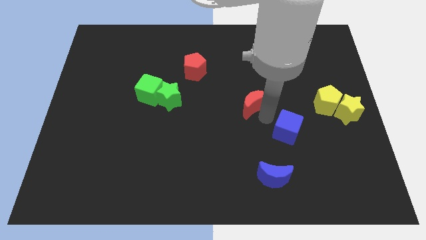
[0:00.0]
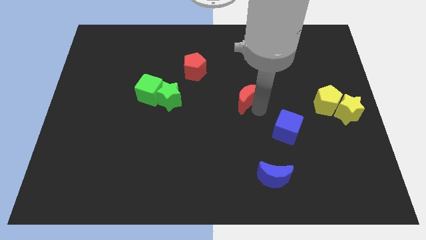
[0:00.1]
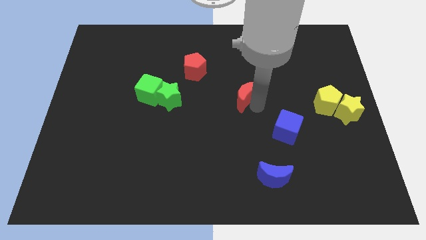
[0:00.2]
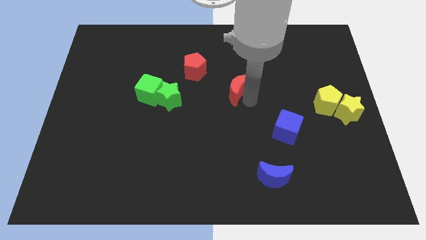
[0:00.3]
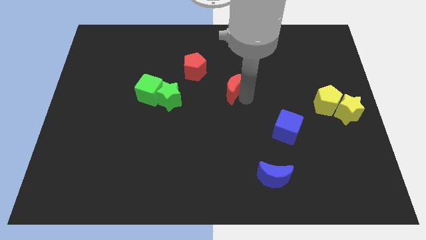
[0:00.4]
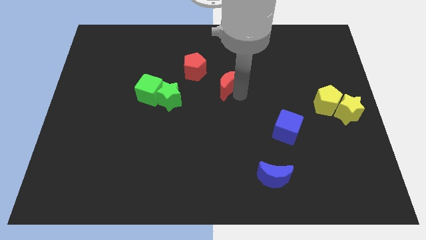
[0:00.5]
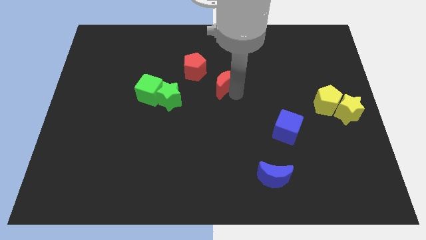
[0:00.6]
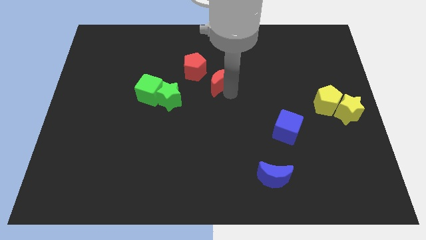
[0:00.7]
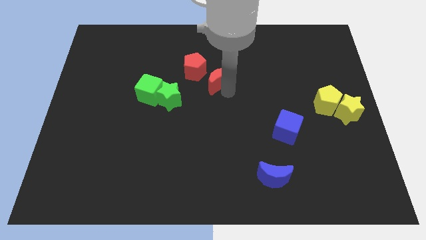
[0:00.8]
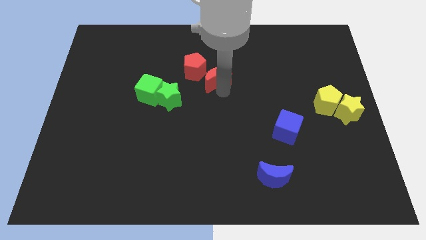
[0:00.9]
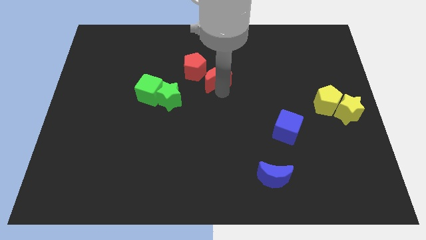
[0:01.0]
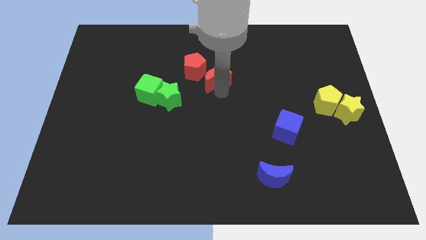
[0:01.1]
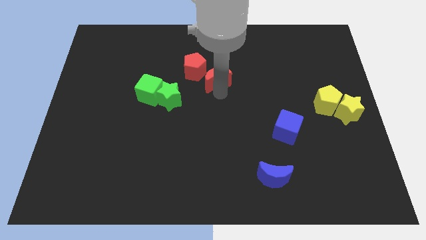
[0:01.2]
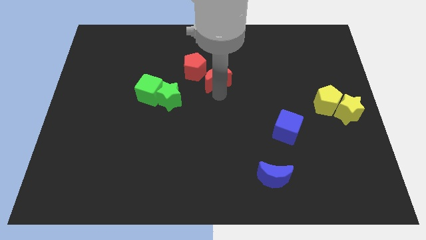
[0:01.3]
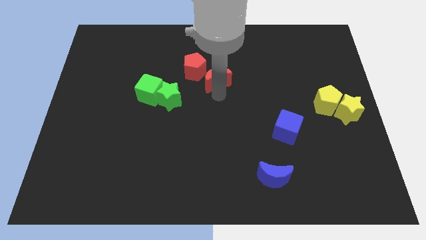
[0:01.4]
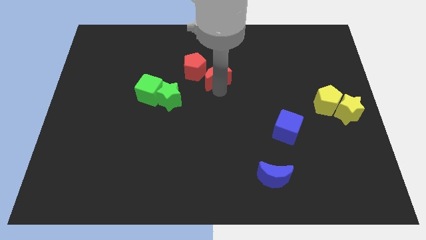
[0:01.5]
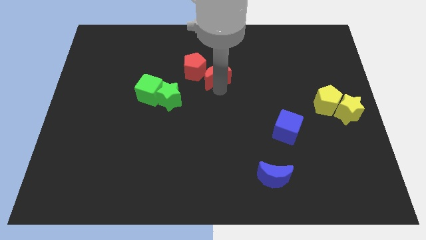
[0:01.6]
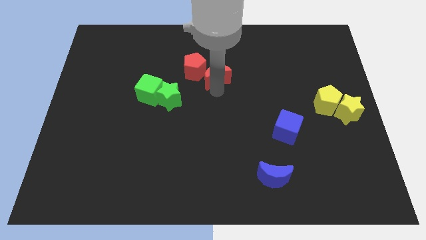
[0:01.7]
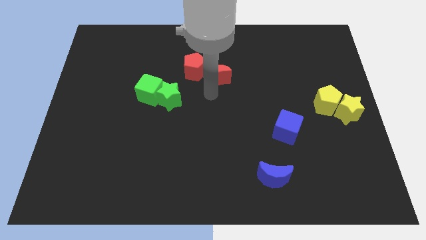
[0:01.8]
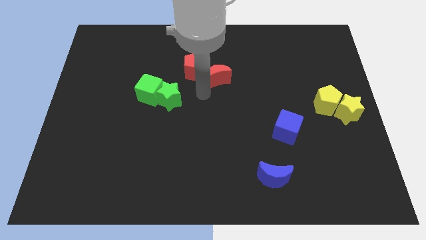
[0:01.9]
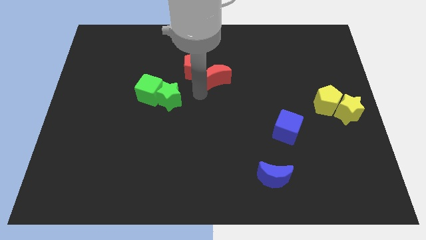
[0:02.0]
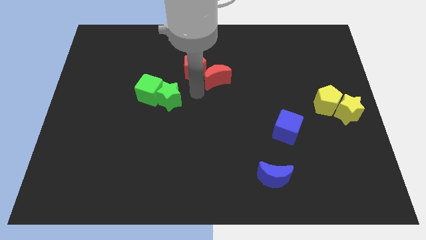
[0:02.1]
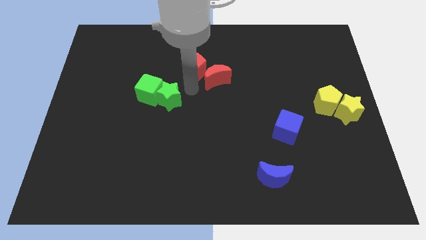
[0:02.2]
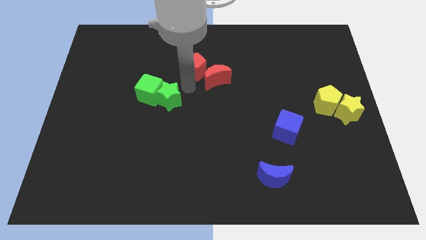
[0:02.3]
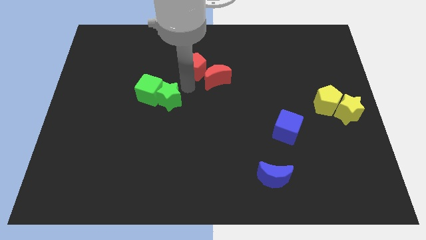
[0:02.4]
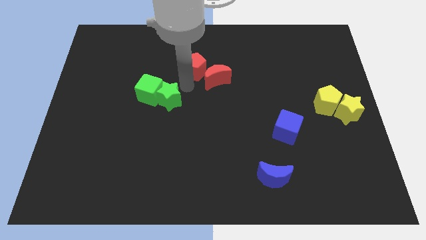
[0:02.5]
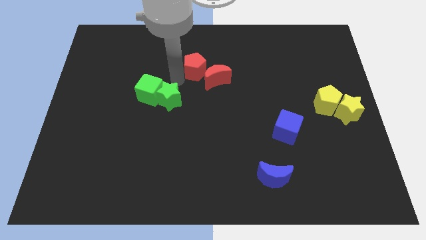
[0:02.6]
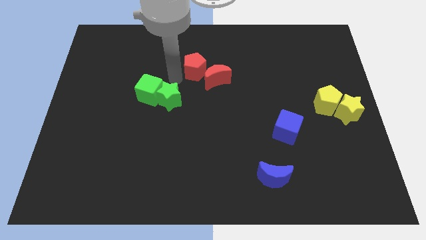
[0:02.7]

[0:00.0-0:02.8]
move the red crescent to the top right of the green star

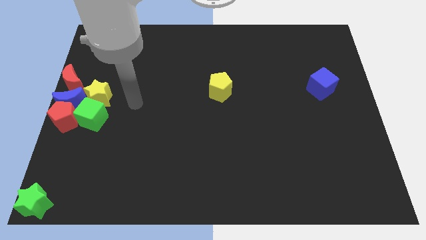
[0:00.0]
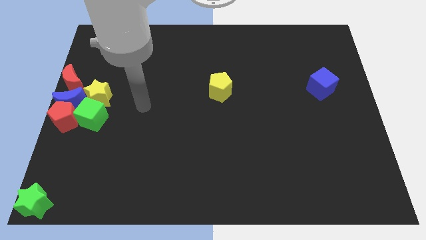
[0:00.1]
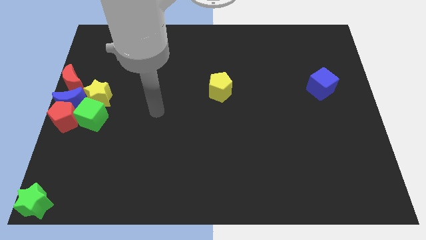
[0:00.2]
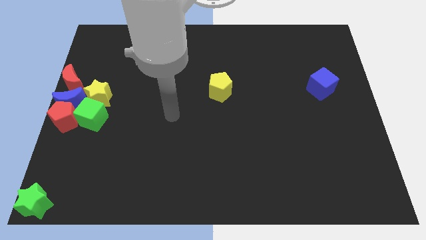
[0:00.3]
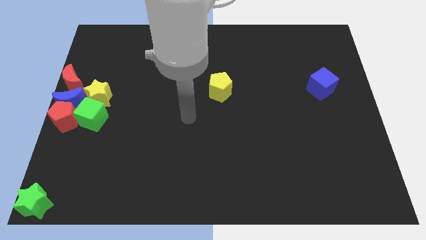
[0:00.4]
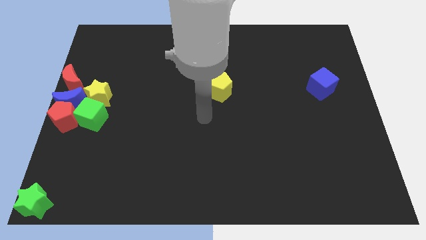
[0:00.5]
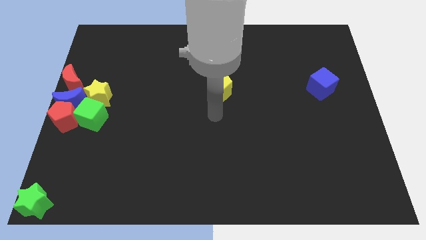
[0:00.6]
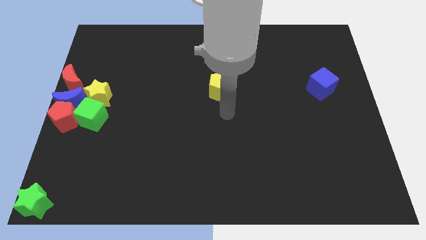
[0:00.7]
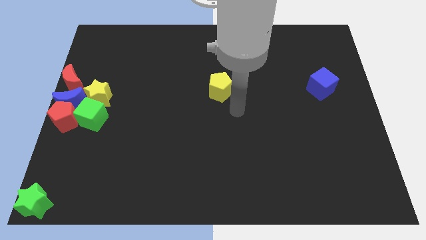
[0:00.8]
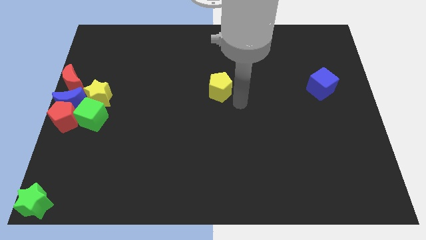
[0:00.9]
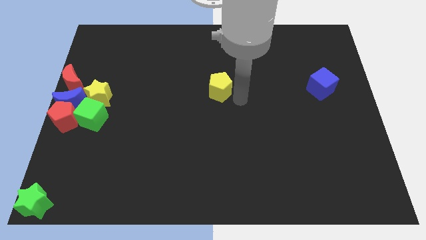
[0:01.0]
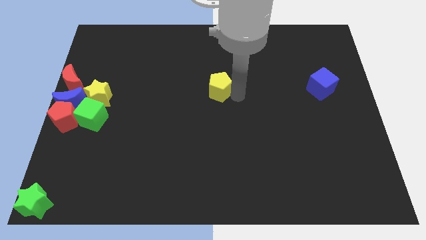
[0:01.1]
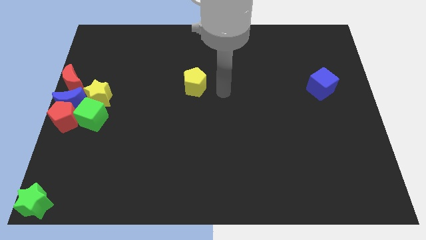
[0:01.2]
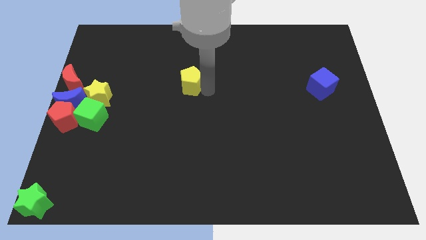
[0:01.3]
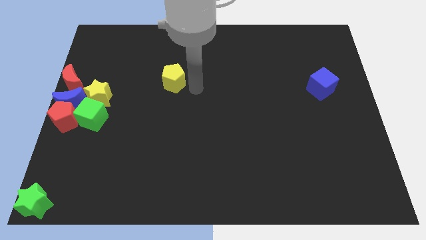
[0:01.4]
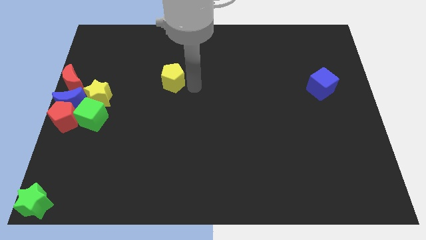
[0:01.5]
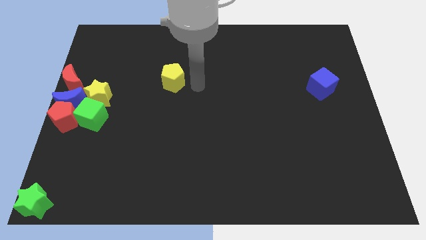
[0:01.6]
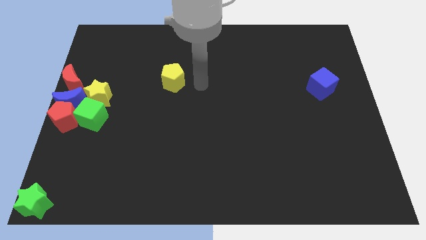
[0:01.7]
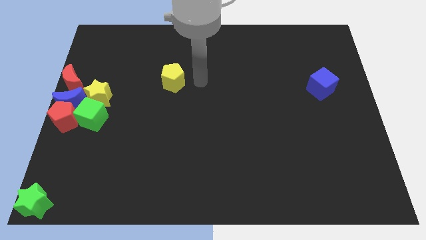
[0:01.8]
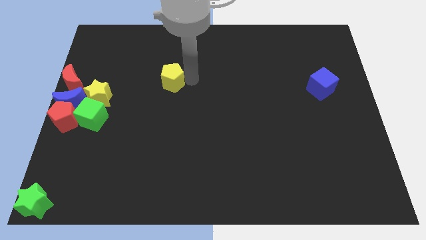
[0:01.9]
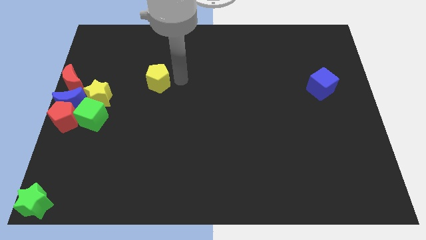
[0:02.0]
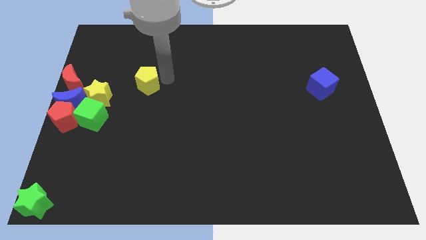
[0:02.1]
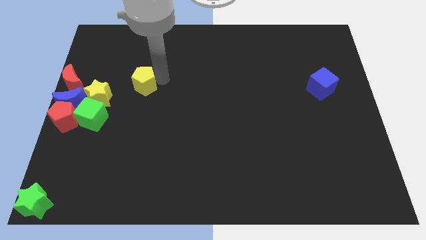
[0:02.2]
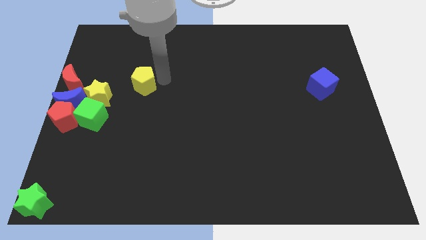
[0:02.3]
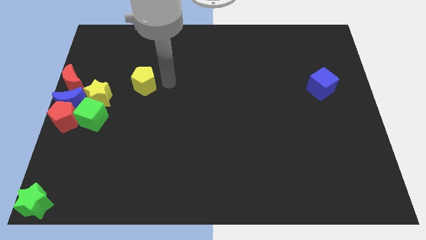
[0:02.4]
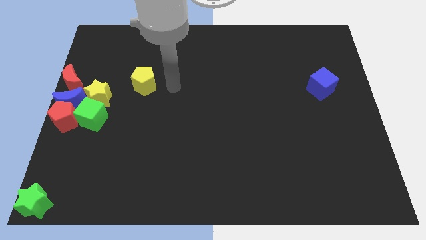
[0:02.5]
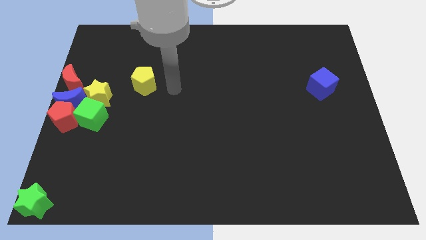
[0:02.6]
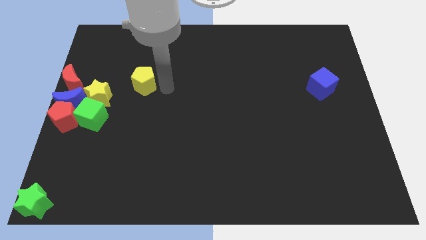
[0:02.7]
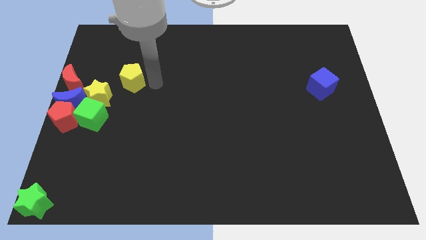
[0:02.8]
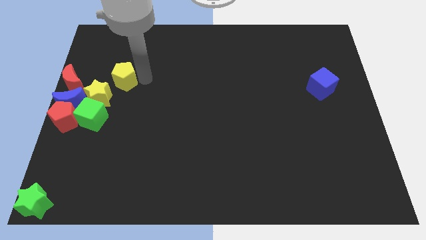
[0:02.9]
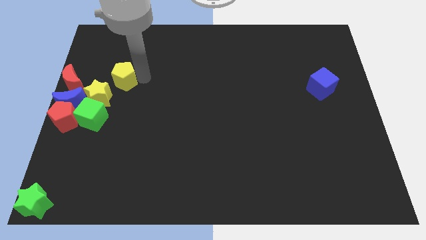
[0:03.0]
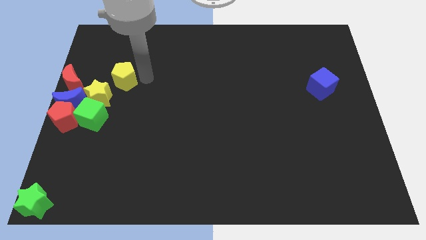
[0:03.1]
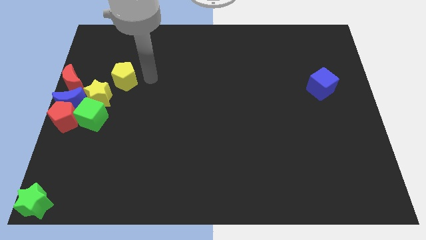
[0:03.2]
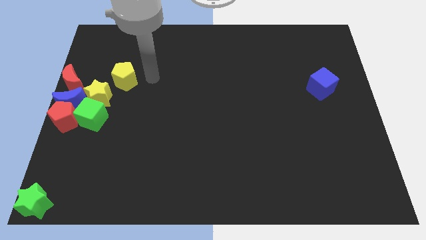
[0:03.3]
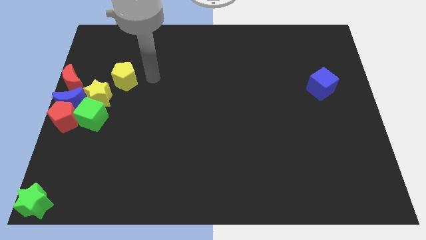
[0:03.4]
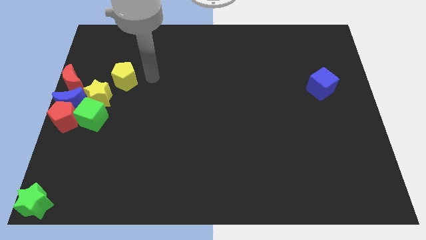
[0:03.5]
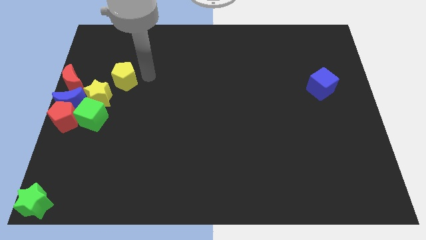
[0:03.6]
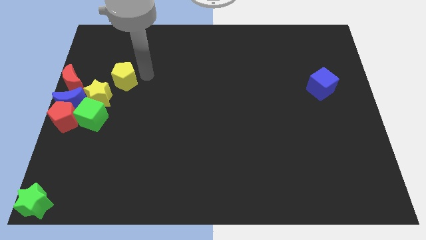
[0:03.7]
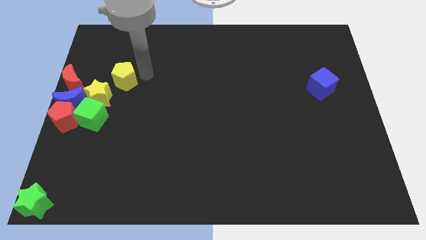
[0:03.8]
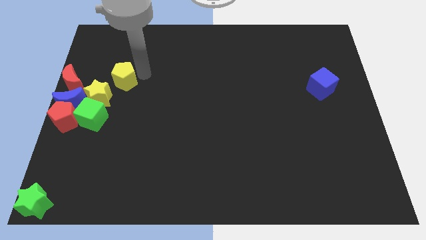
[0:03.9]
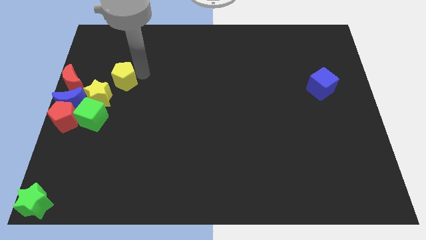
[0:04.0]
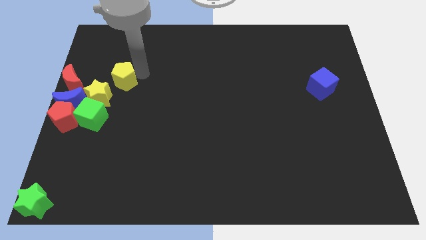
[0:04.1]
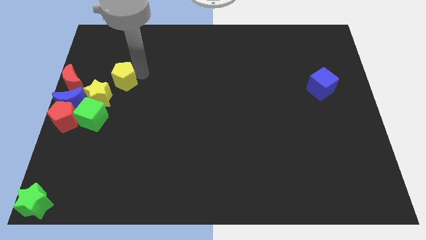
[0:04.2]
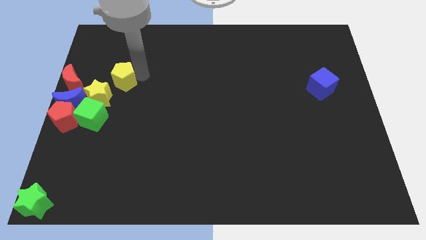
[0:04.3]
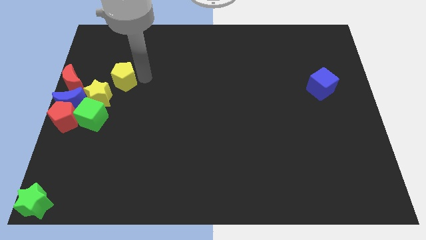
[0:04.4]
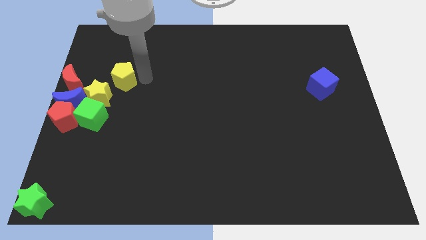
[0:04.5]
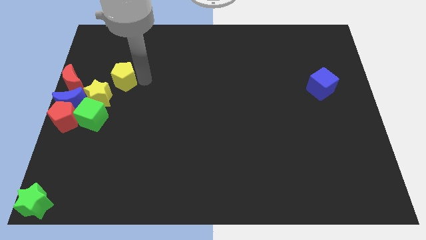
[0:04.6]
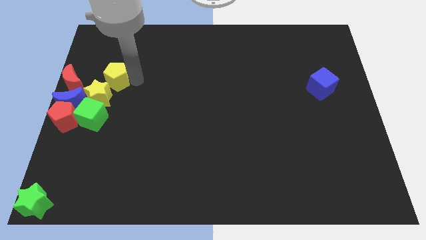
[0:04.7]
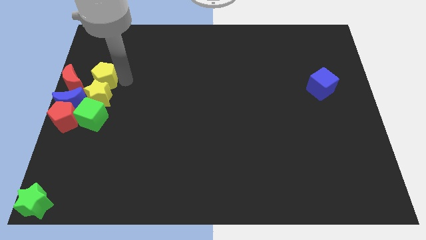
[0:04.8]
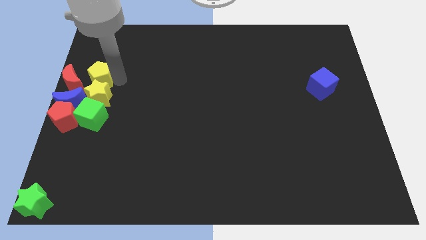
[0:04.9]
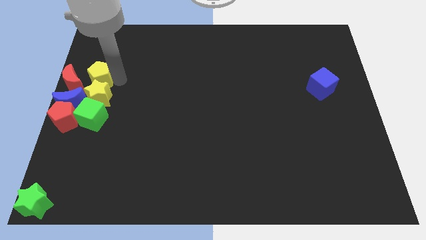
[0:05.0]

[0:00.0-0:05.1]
place the yellow pentagon above the yellow star

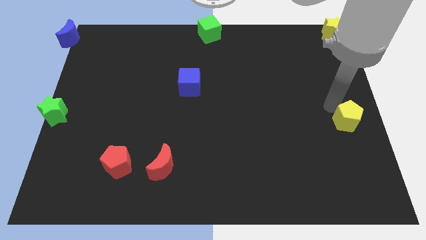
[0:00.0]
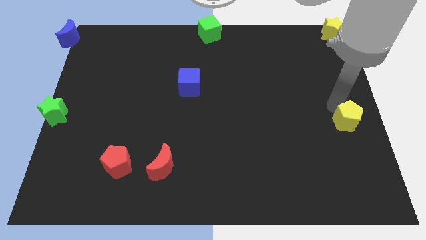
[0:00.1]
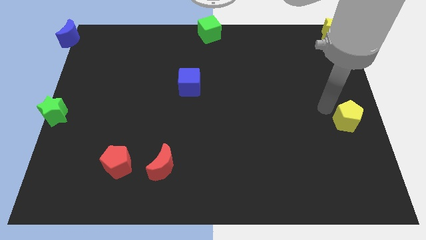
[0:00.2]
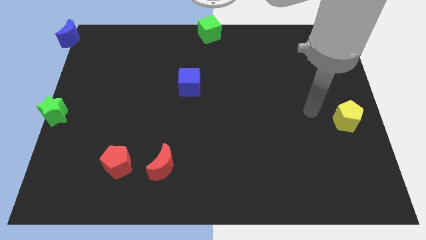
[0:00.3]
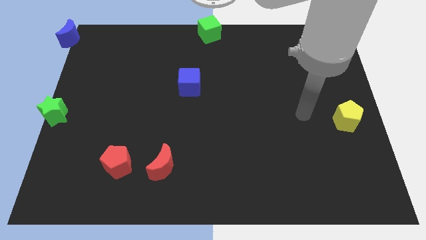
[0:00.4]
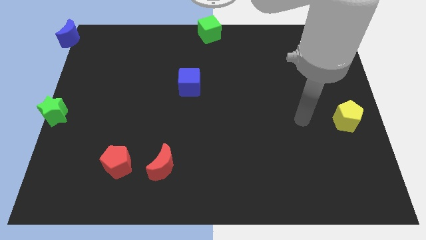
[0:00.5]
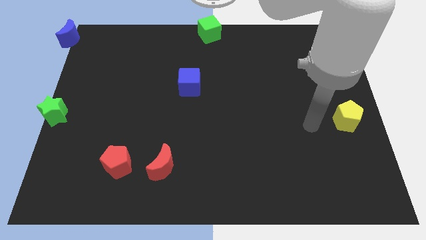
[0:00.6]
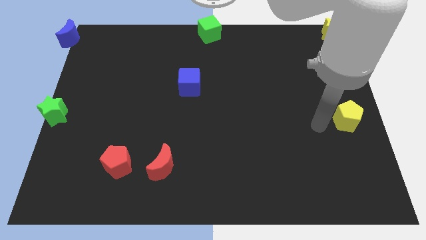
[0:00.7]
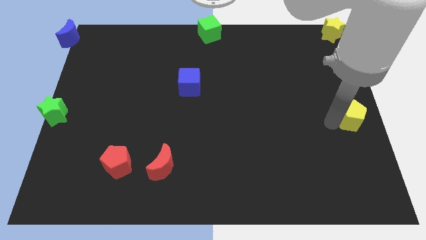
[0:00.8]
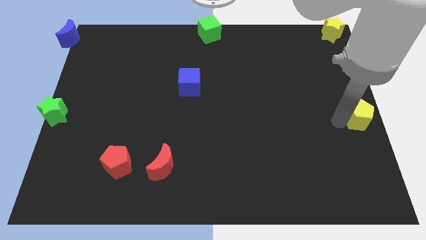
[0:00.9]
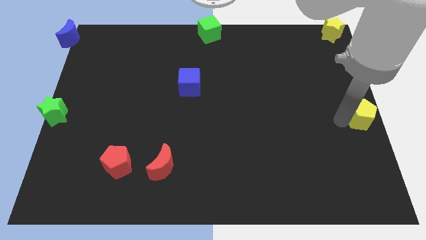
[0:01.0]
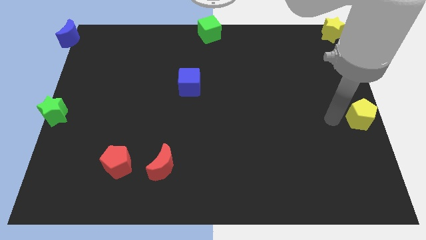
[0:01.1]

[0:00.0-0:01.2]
move the yellow pentagon to the right middle of the board
